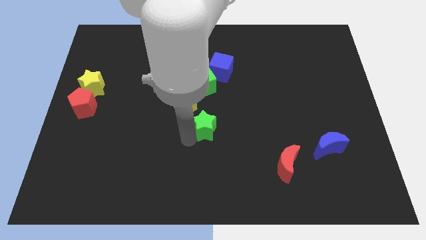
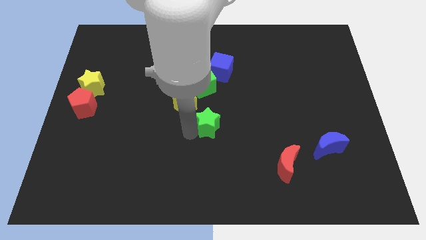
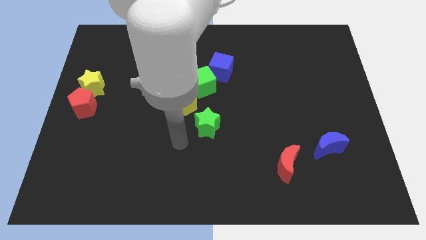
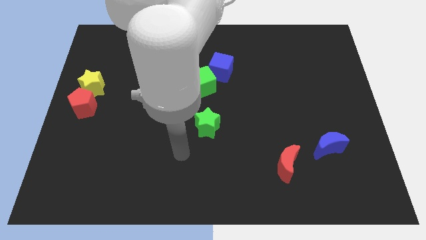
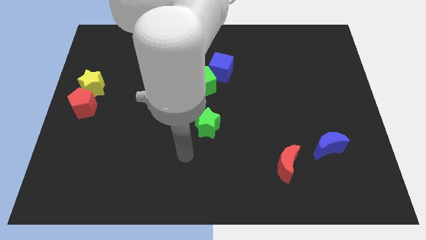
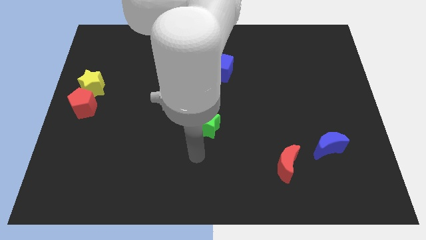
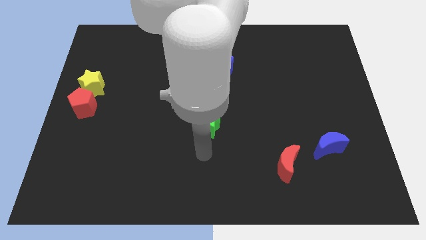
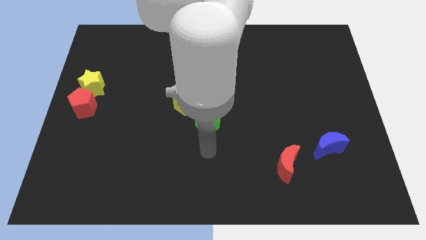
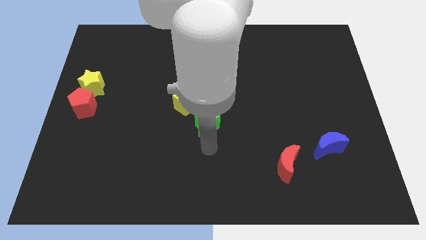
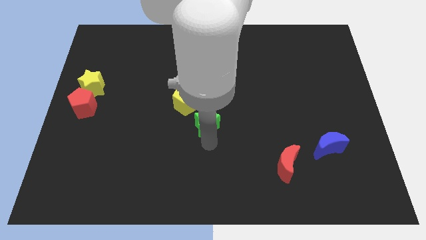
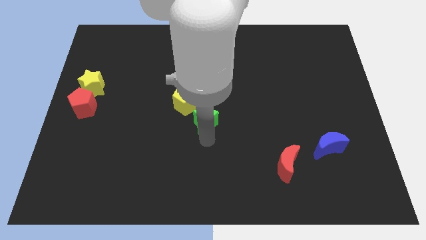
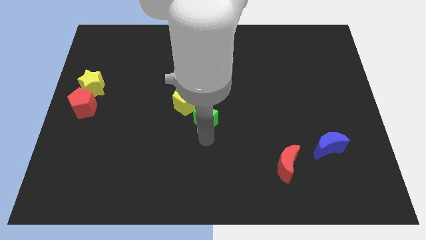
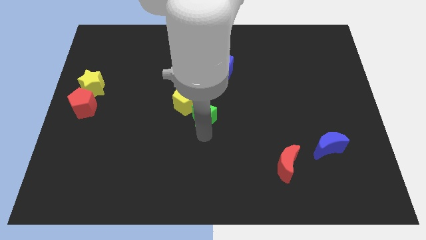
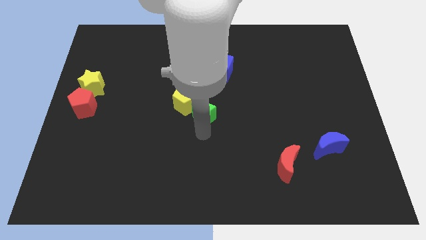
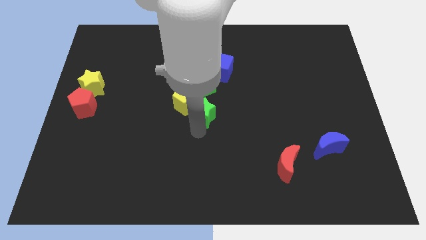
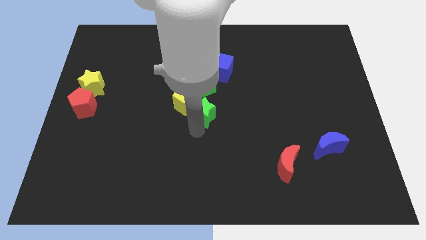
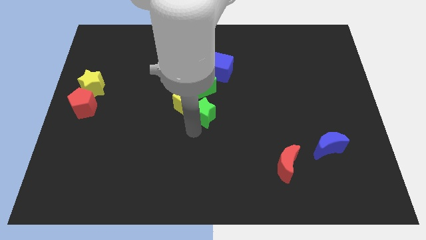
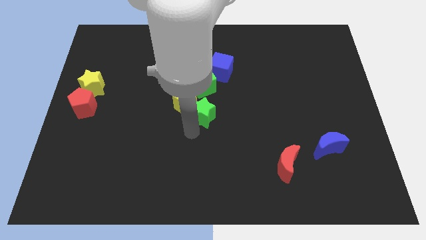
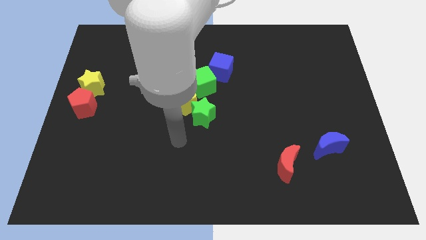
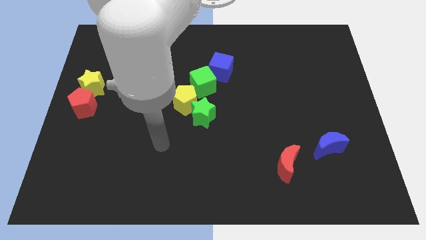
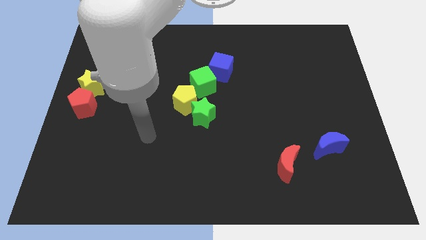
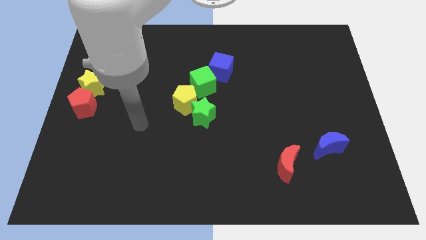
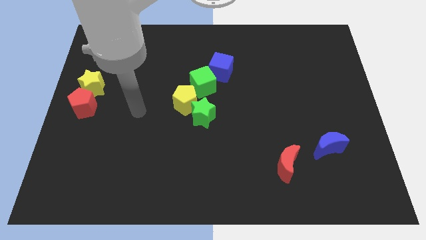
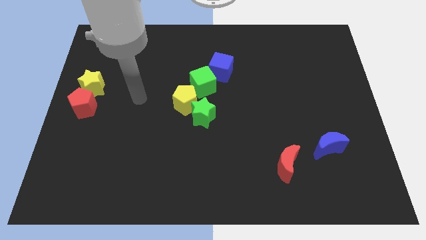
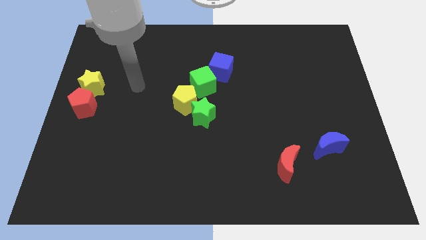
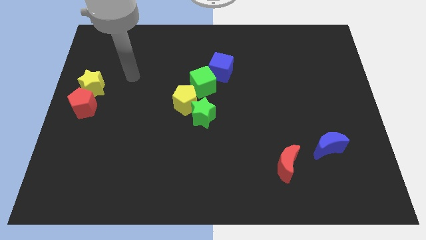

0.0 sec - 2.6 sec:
move green star to center

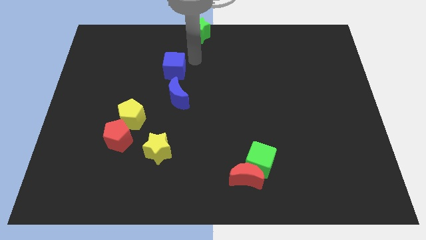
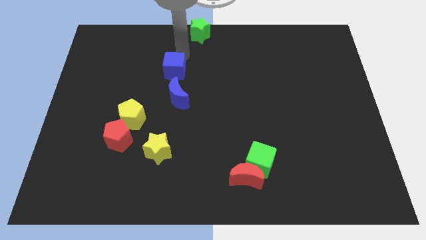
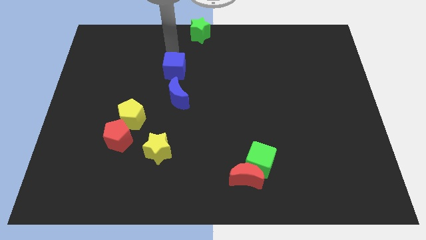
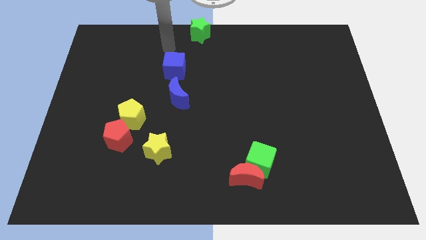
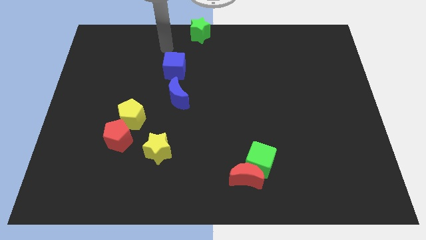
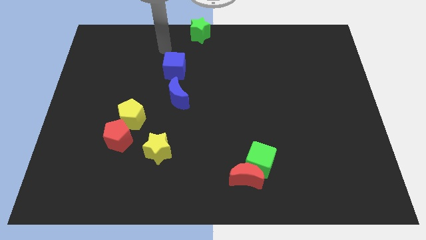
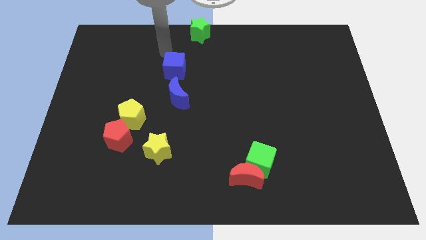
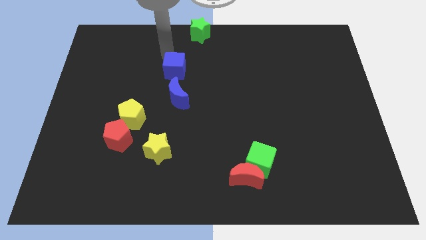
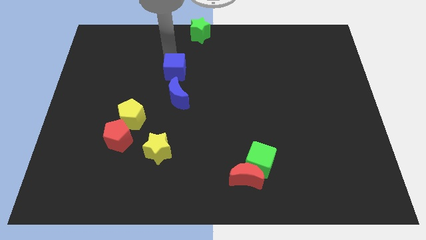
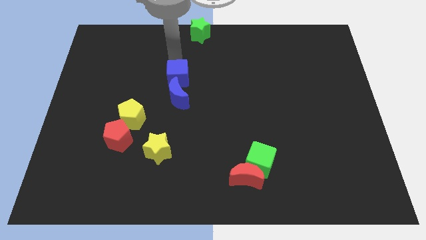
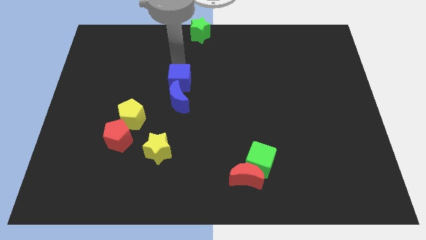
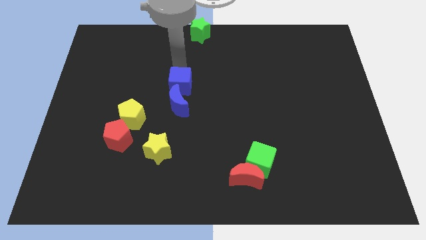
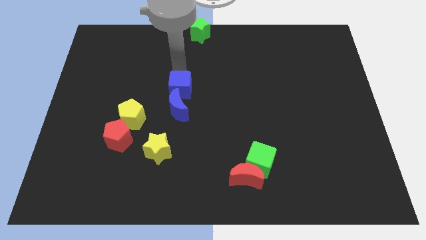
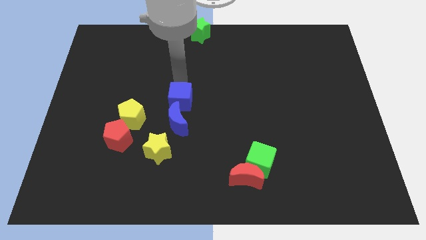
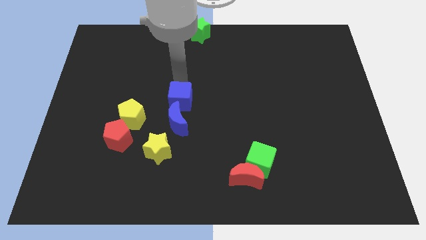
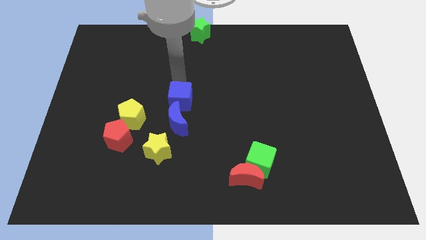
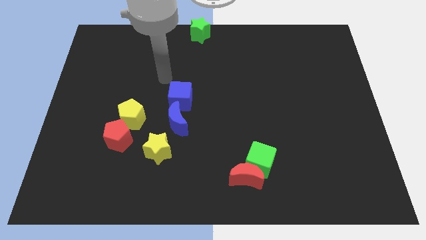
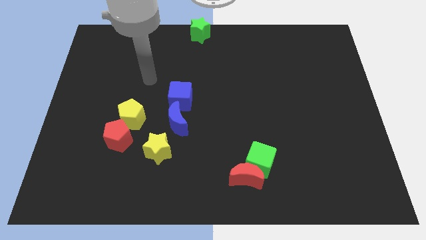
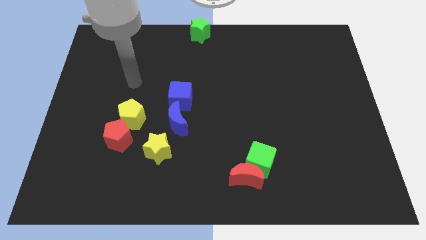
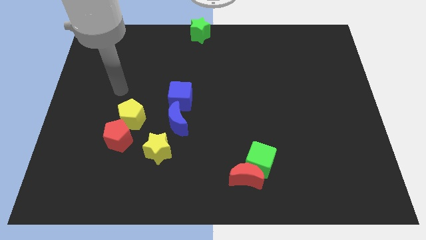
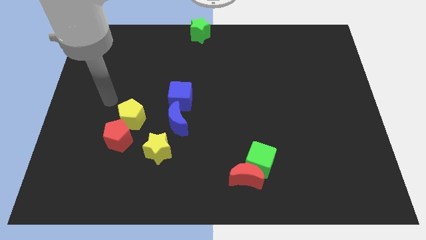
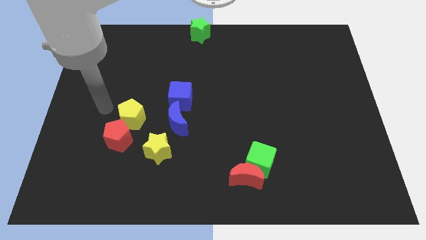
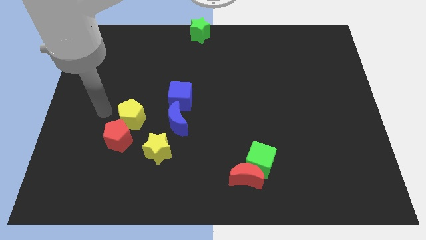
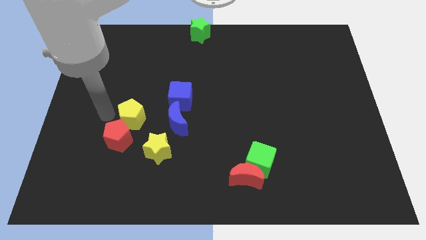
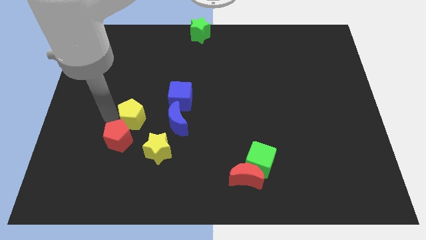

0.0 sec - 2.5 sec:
push the blue cube into the blue moon

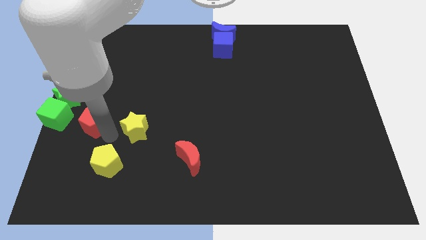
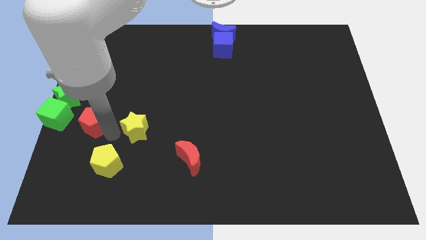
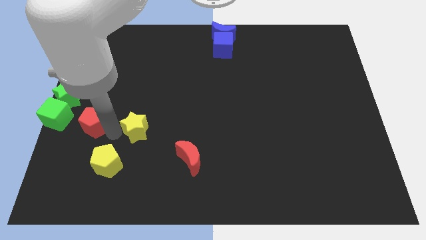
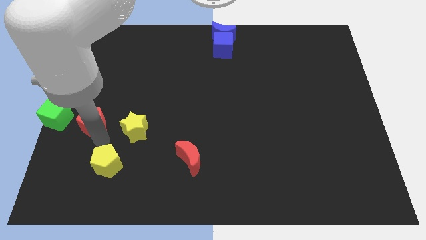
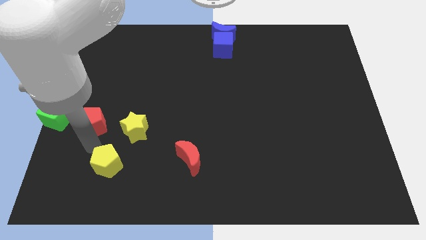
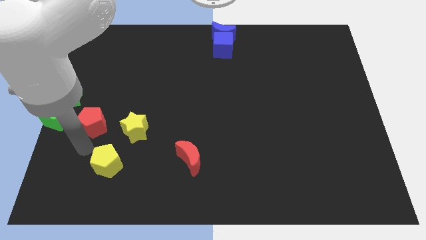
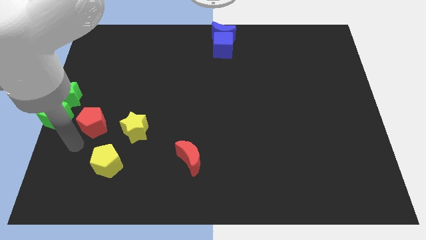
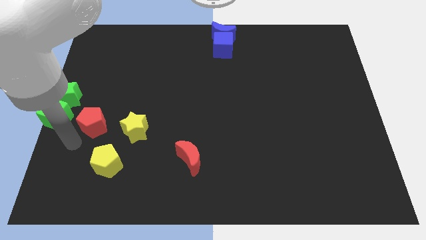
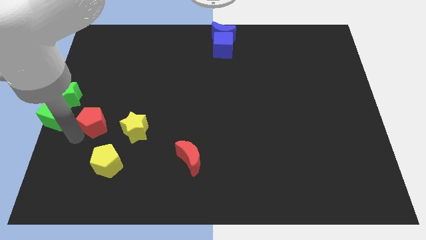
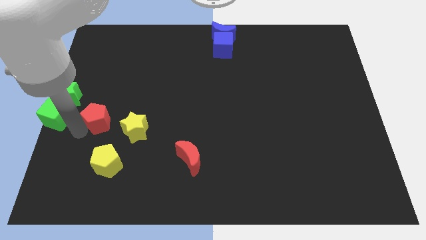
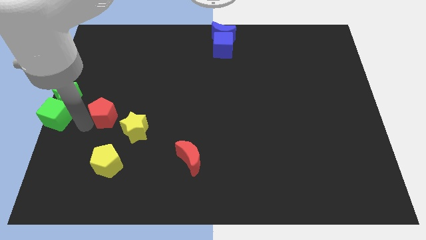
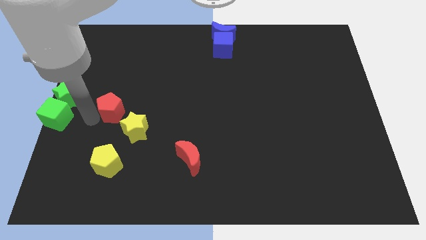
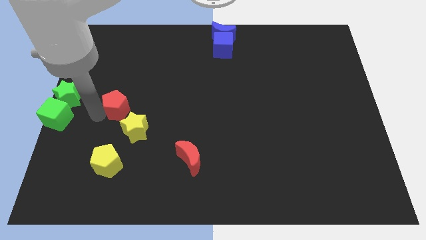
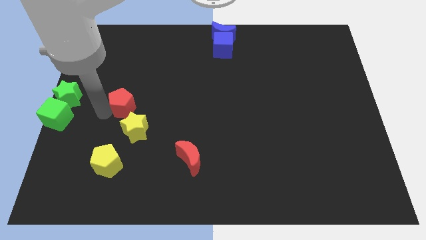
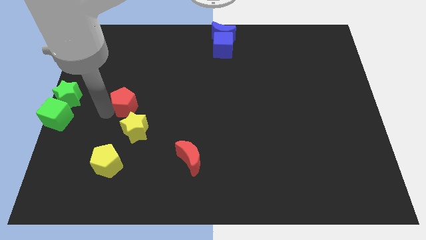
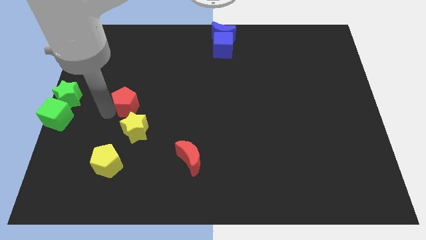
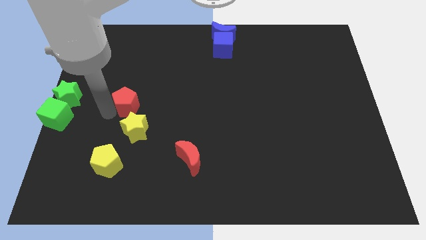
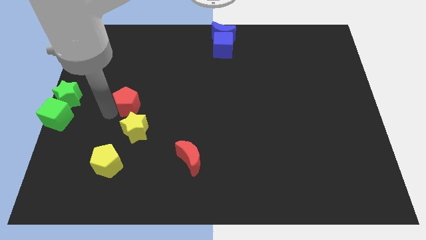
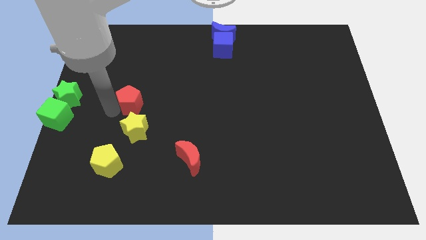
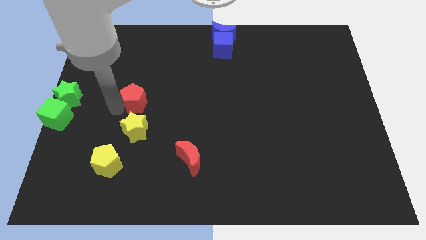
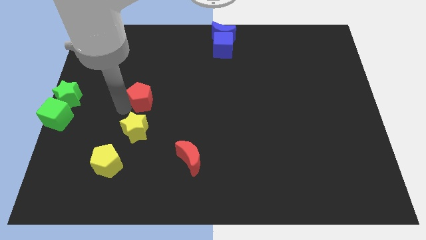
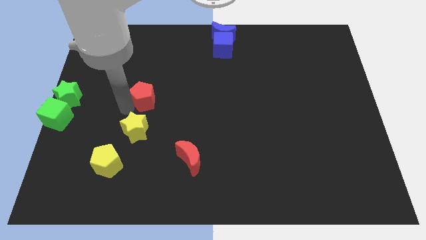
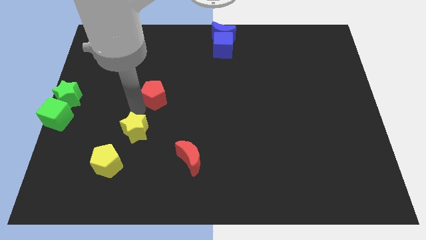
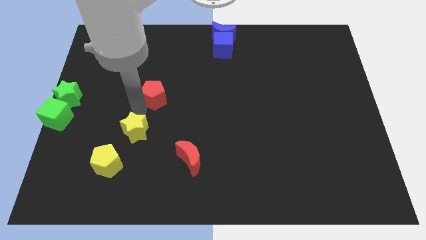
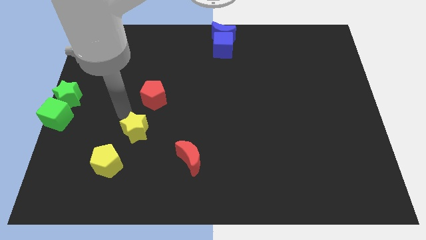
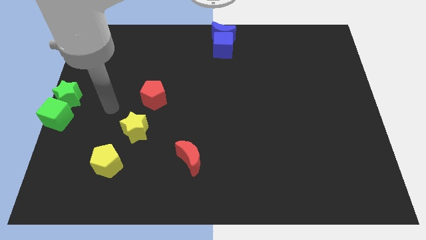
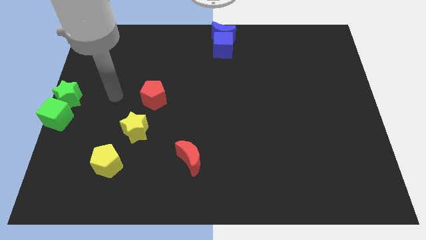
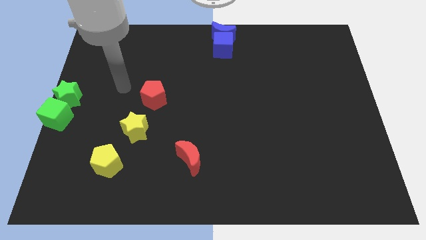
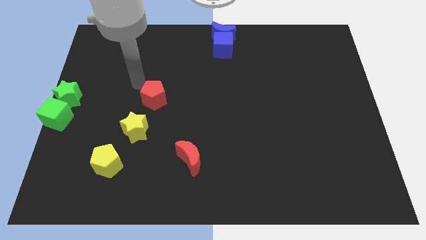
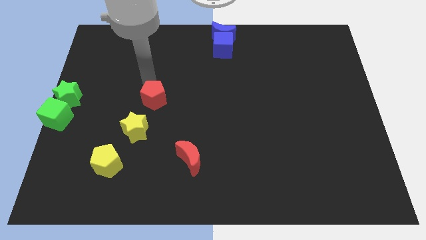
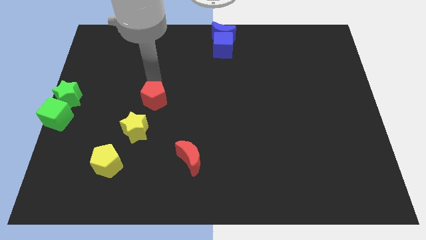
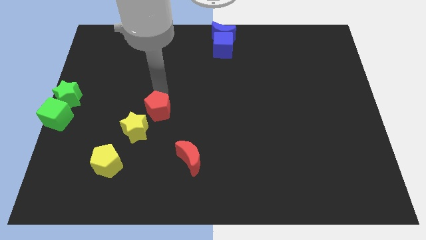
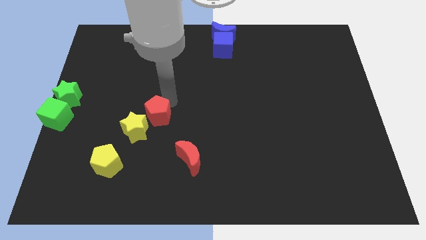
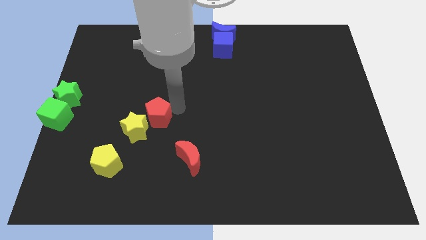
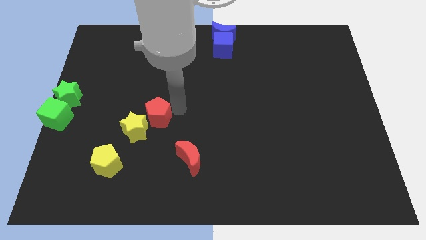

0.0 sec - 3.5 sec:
place the red pentagon diagonally top right to the yellow star

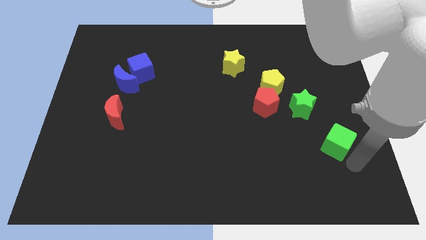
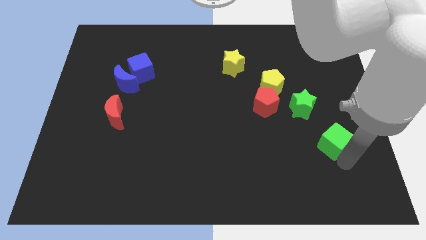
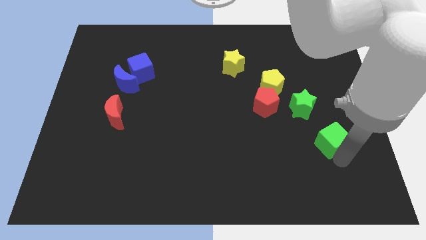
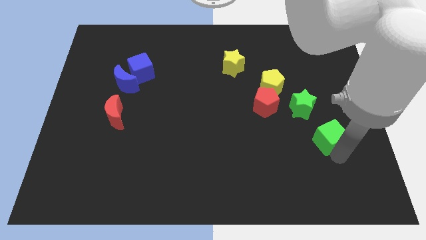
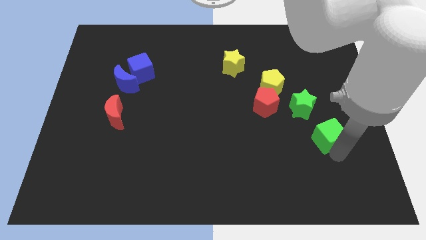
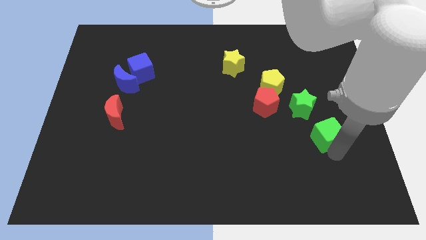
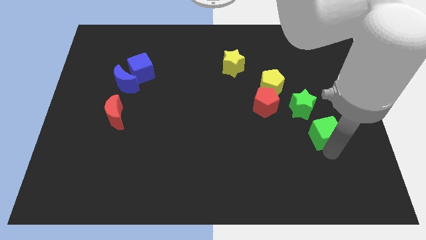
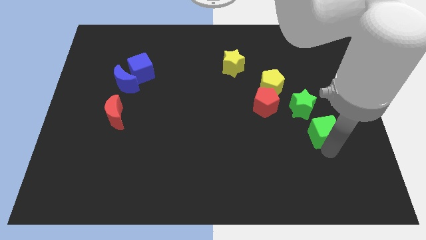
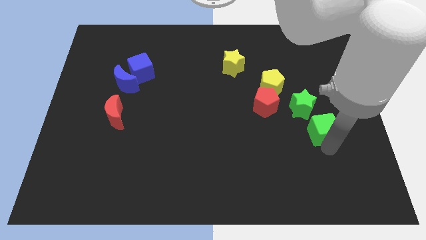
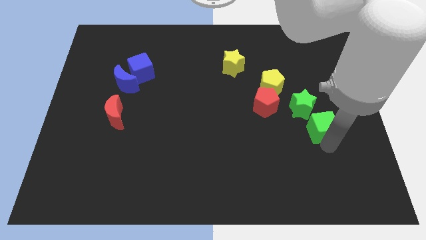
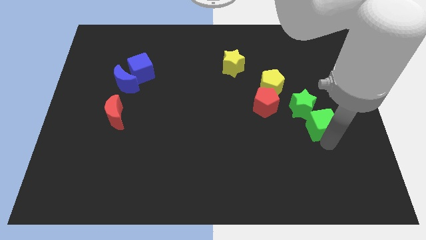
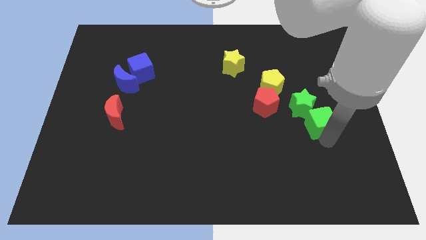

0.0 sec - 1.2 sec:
push the green cube towards the green star
